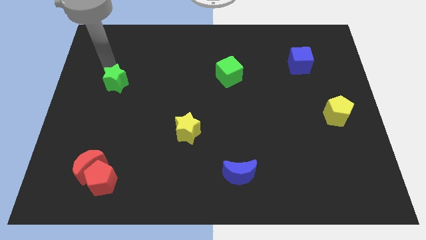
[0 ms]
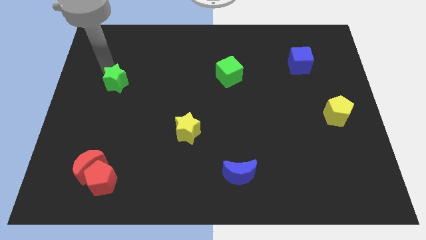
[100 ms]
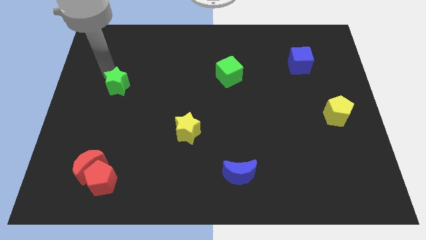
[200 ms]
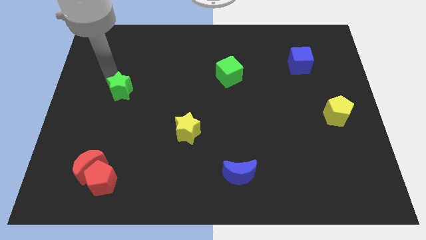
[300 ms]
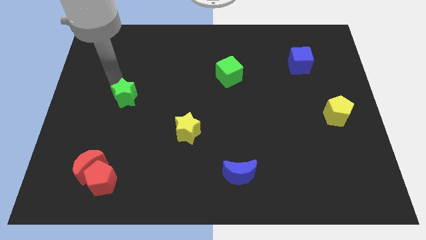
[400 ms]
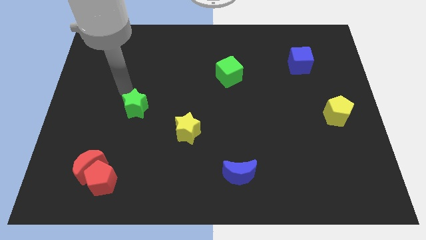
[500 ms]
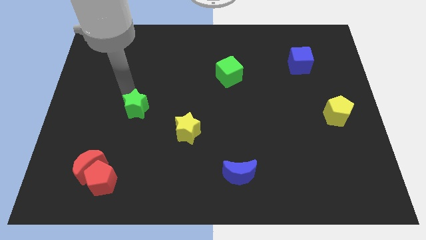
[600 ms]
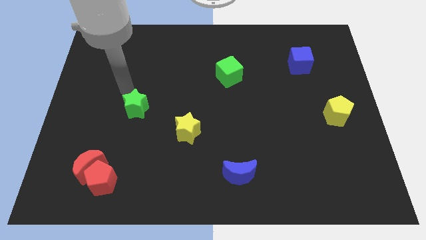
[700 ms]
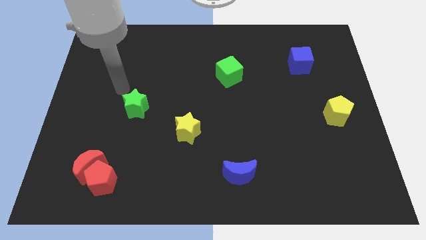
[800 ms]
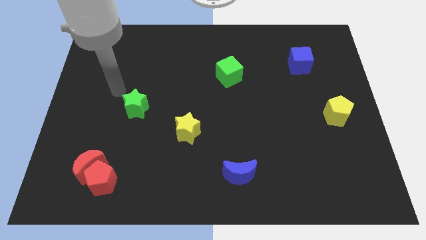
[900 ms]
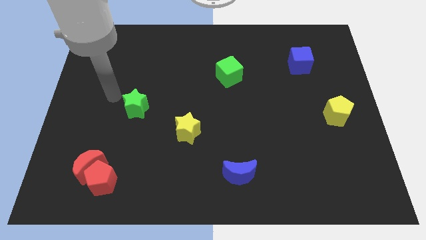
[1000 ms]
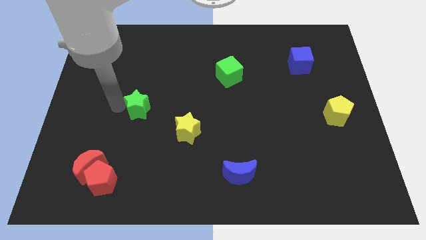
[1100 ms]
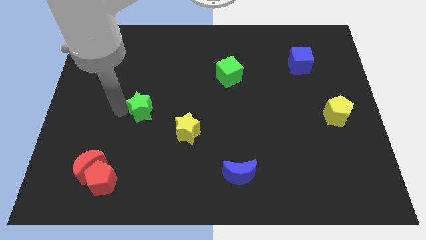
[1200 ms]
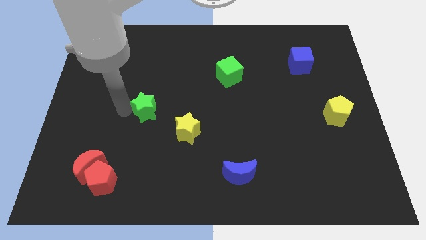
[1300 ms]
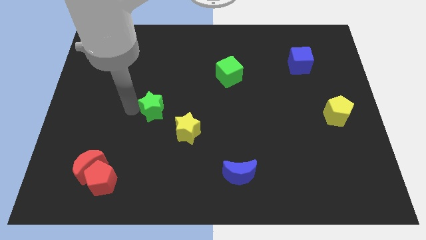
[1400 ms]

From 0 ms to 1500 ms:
place the green star diagonally to yellow star

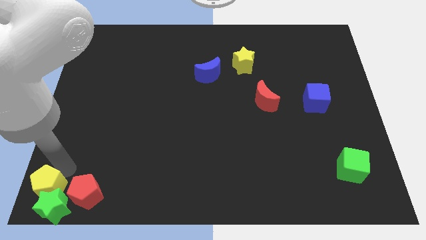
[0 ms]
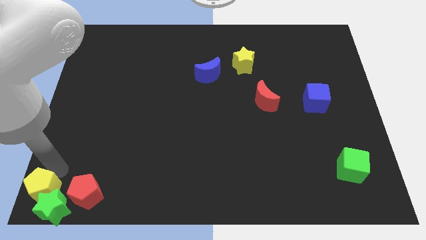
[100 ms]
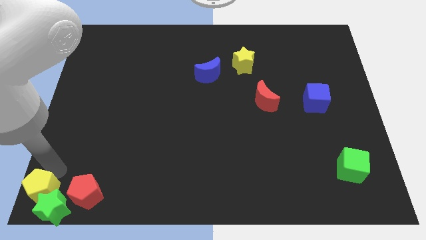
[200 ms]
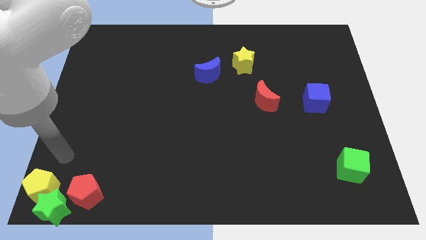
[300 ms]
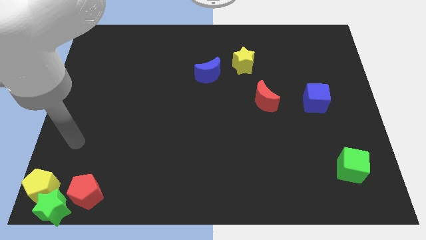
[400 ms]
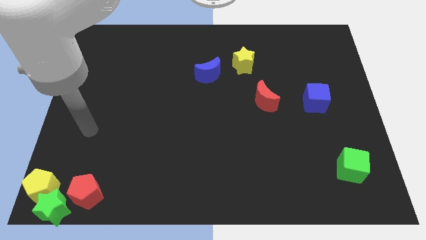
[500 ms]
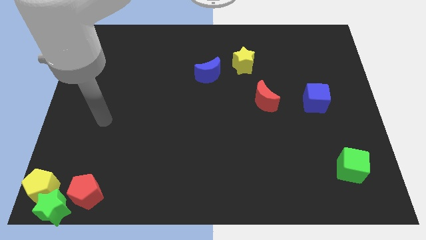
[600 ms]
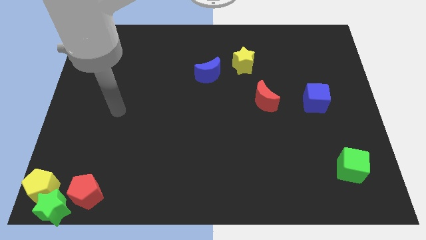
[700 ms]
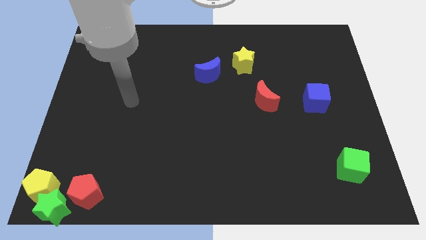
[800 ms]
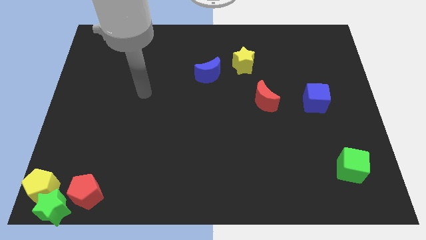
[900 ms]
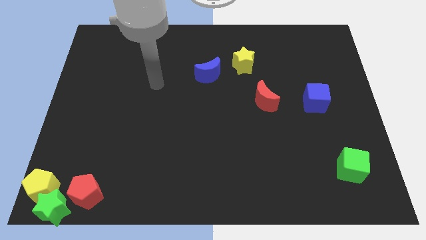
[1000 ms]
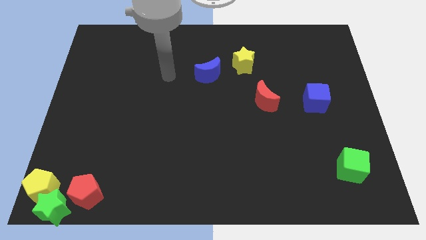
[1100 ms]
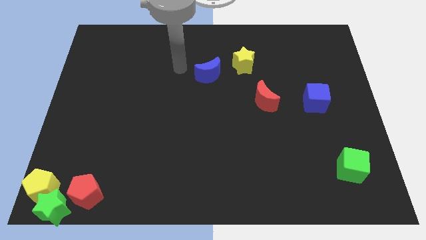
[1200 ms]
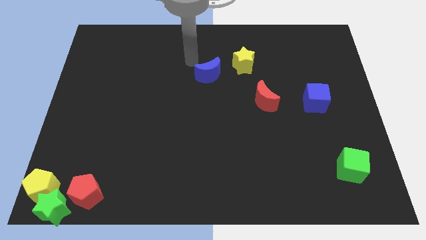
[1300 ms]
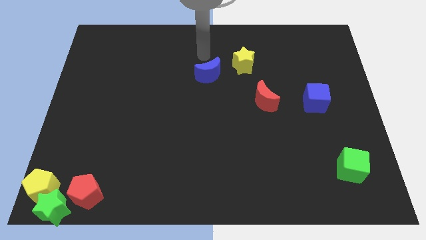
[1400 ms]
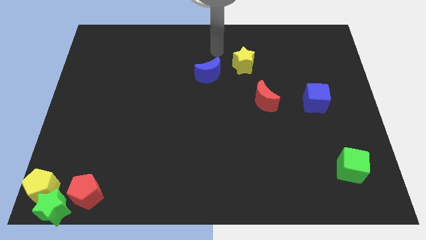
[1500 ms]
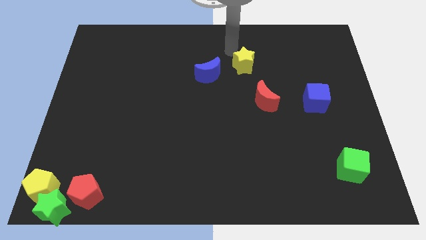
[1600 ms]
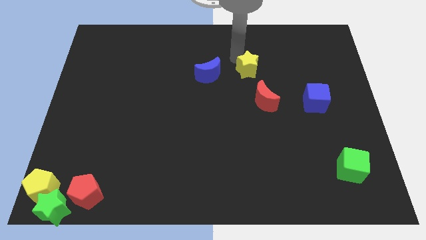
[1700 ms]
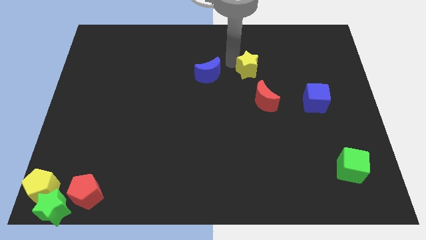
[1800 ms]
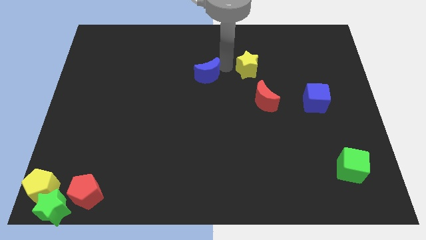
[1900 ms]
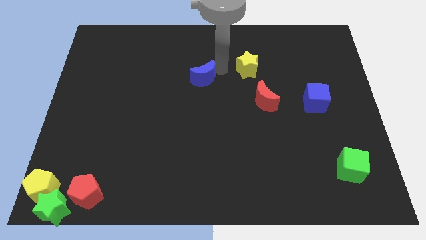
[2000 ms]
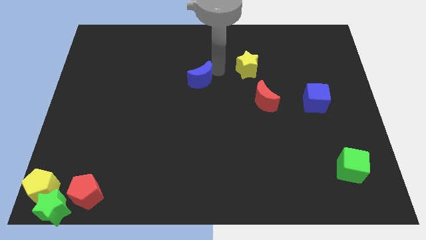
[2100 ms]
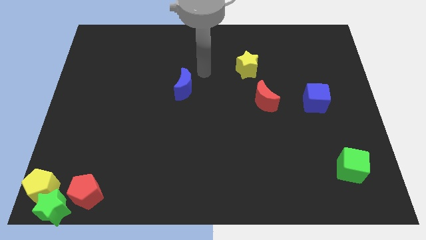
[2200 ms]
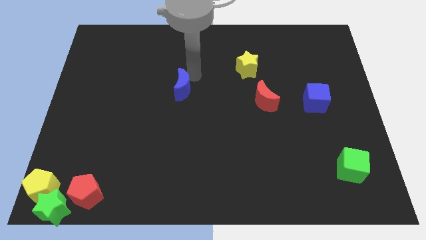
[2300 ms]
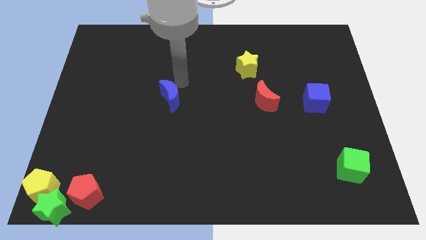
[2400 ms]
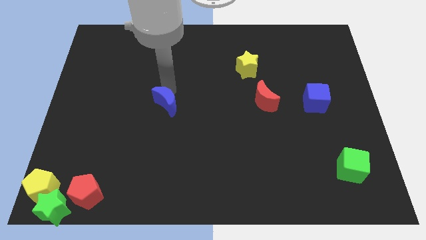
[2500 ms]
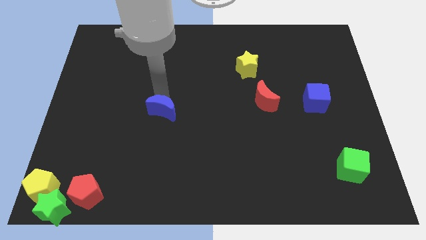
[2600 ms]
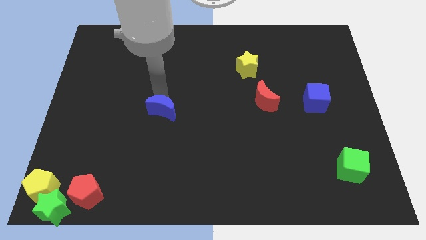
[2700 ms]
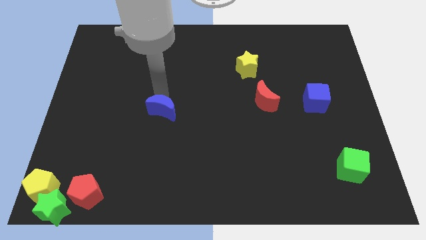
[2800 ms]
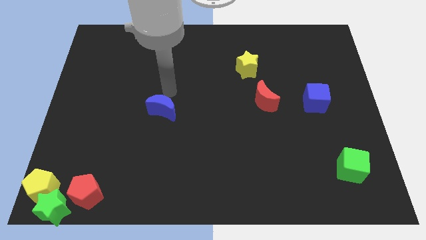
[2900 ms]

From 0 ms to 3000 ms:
move the blue moon towards the center left

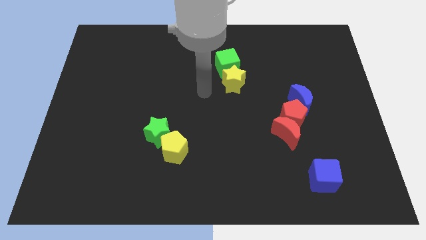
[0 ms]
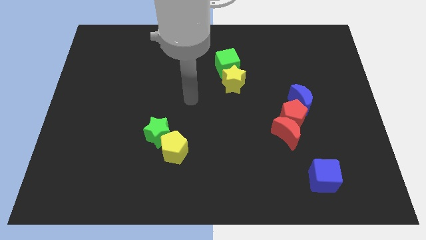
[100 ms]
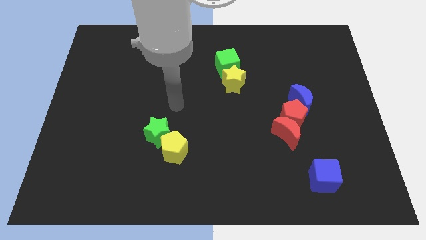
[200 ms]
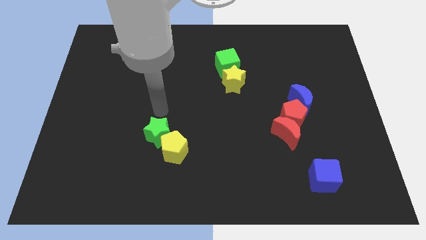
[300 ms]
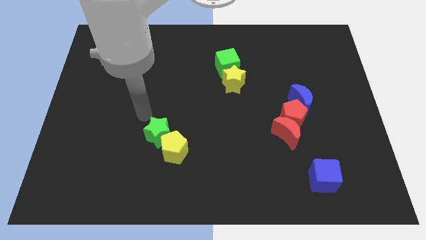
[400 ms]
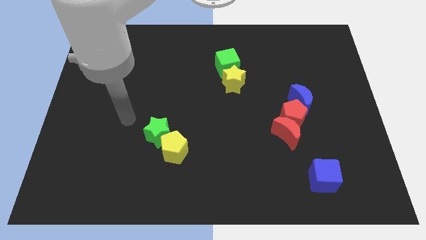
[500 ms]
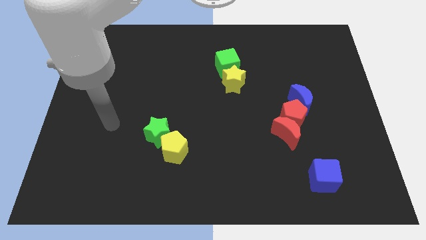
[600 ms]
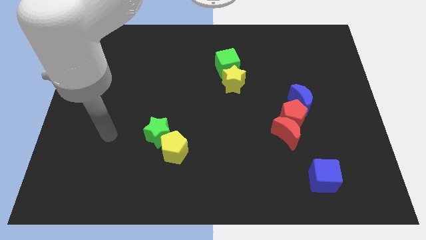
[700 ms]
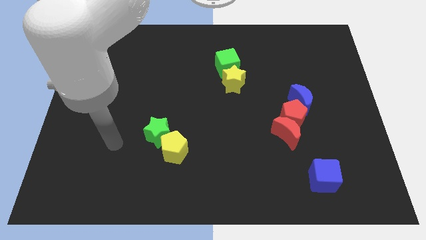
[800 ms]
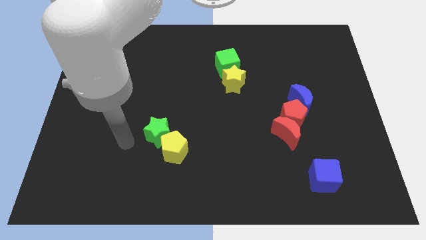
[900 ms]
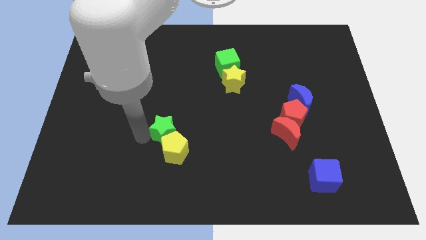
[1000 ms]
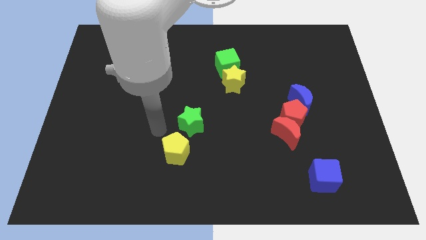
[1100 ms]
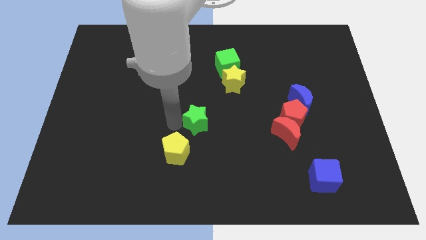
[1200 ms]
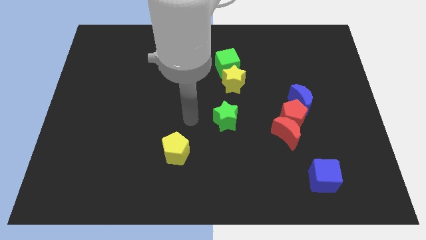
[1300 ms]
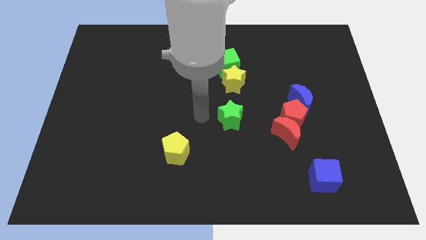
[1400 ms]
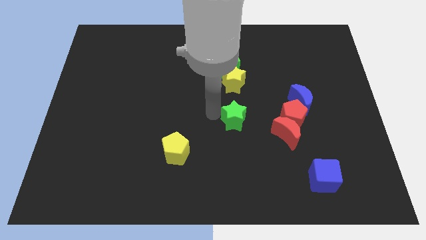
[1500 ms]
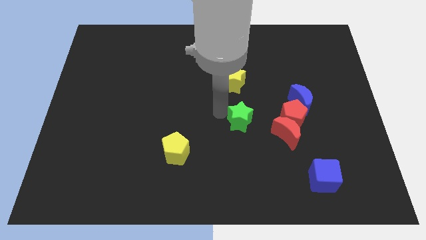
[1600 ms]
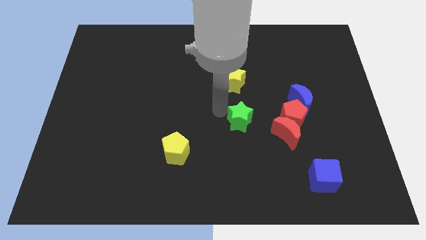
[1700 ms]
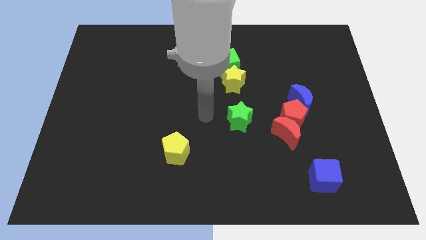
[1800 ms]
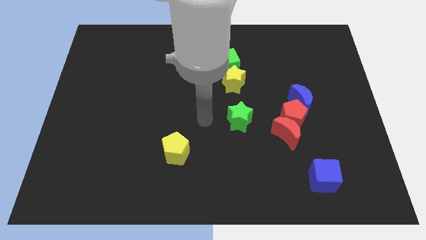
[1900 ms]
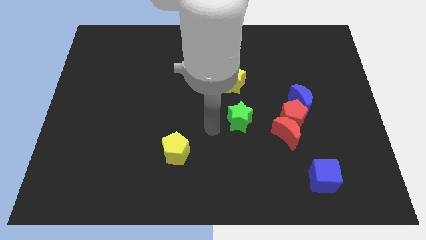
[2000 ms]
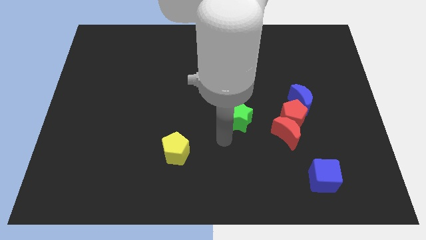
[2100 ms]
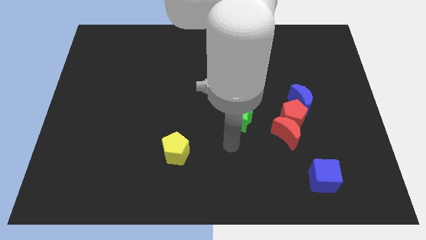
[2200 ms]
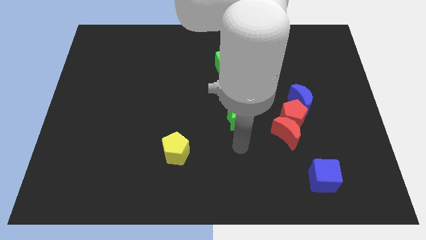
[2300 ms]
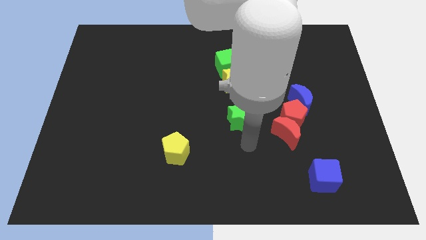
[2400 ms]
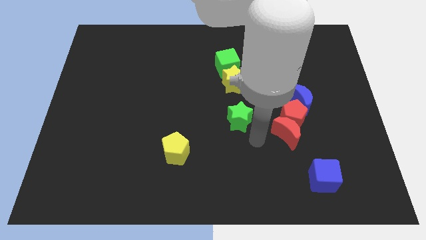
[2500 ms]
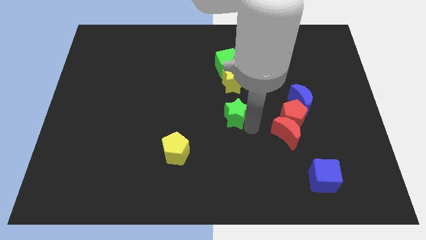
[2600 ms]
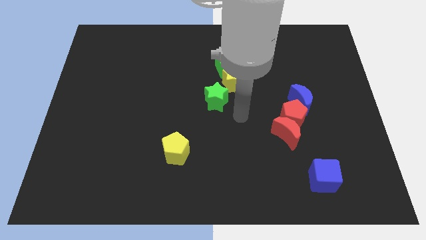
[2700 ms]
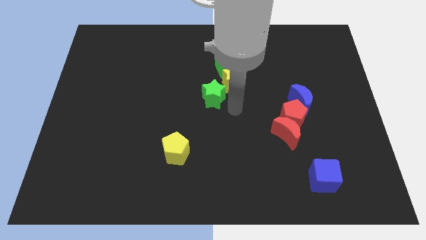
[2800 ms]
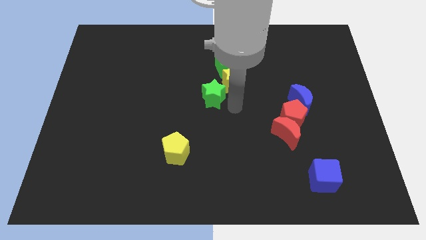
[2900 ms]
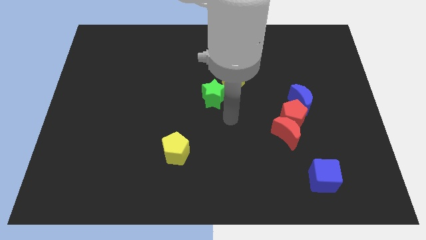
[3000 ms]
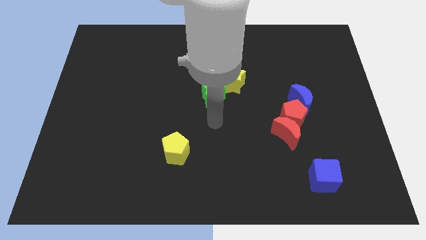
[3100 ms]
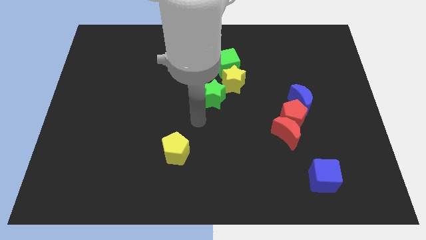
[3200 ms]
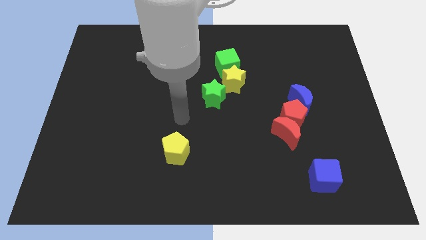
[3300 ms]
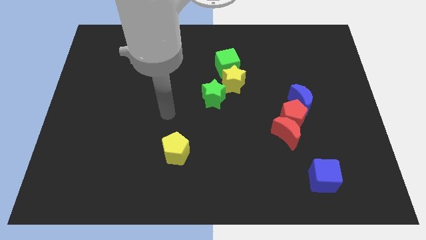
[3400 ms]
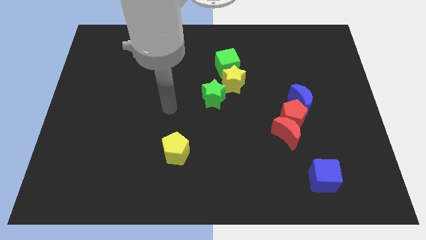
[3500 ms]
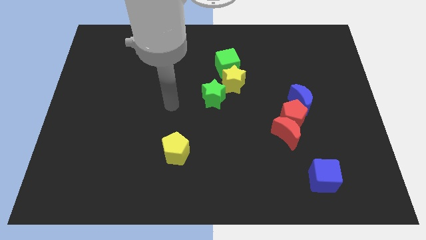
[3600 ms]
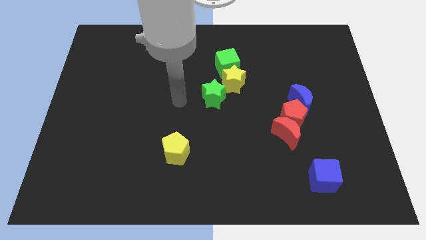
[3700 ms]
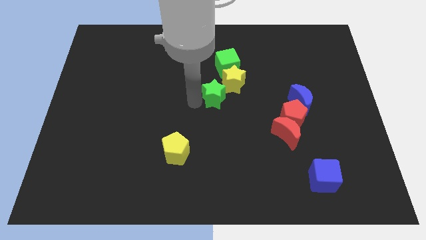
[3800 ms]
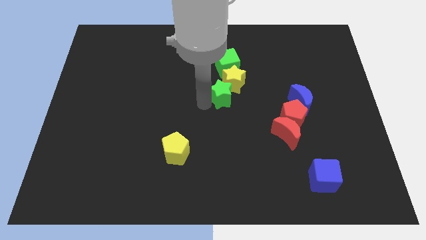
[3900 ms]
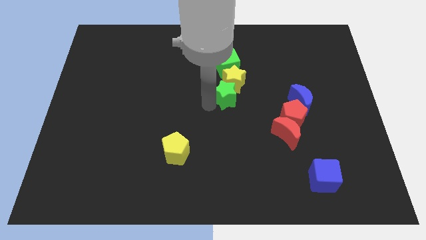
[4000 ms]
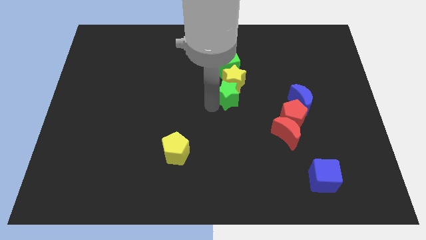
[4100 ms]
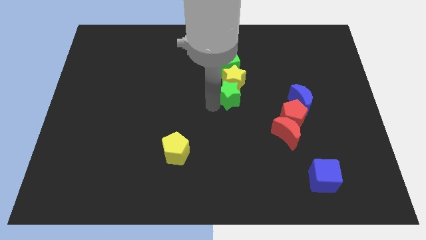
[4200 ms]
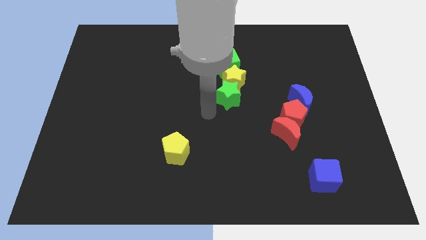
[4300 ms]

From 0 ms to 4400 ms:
place the green star below the yellow star

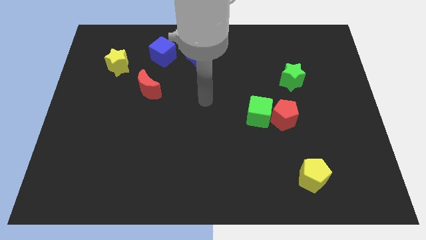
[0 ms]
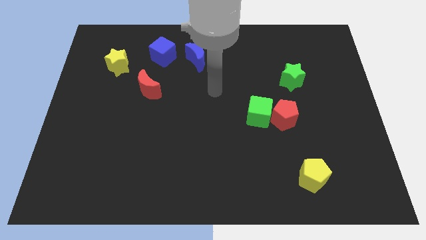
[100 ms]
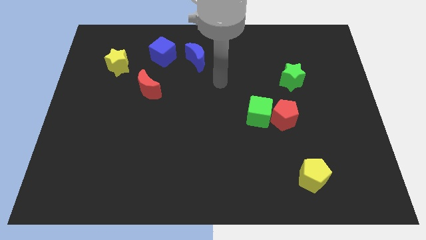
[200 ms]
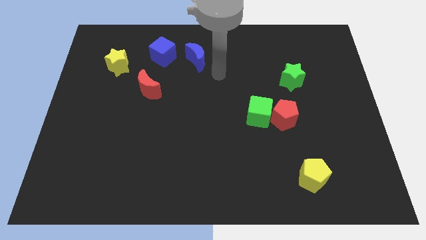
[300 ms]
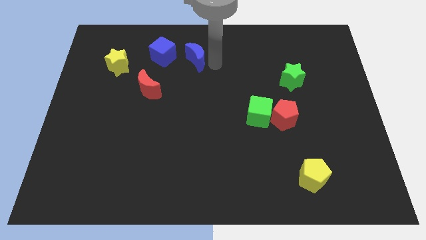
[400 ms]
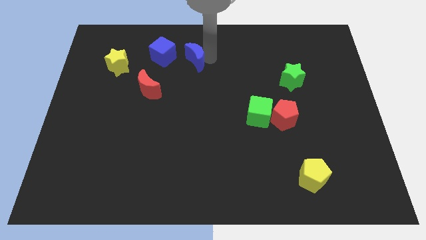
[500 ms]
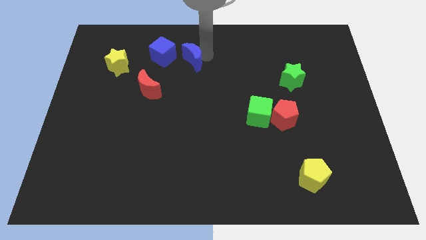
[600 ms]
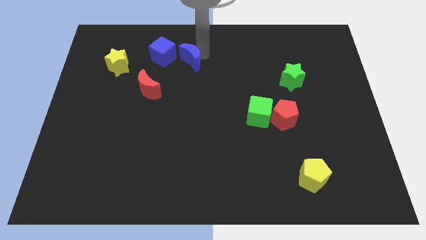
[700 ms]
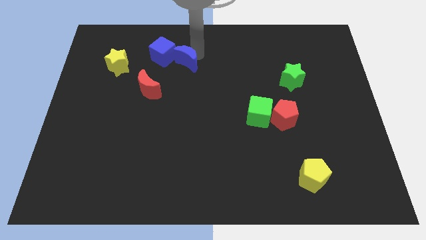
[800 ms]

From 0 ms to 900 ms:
move the blue moon to the right side of blue cube
